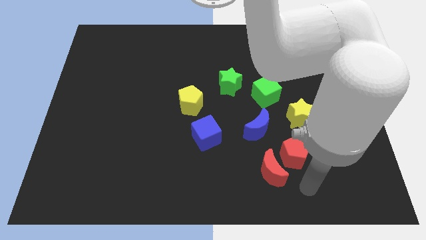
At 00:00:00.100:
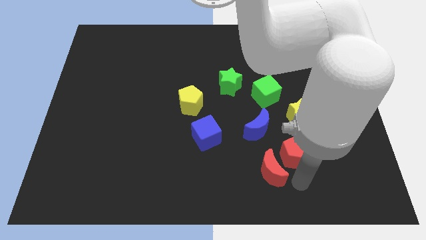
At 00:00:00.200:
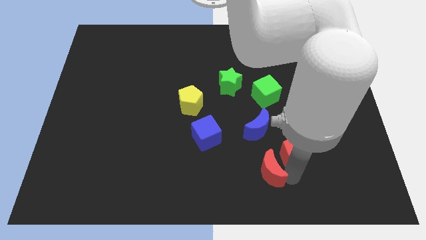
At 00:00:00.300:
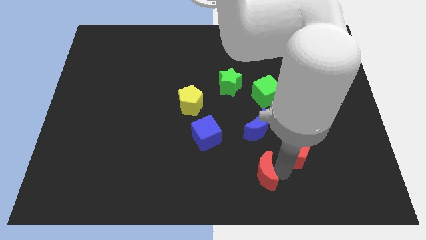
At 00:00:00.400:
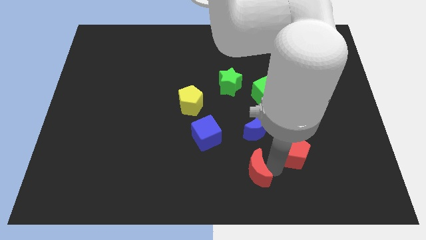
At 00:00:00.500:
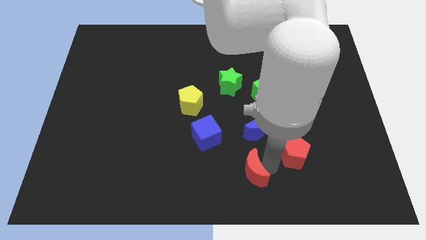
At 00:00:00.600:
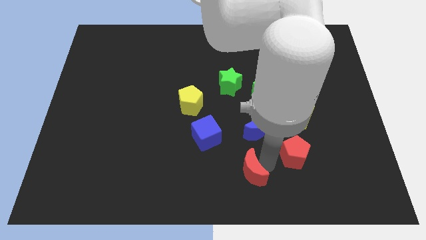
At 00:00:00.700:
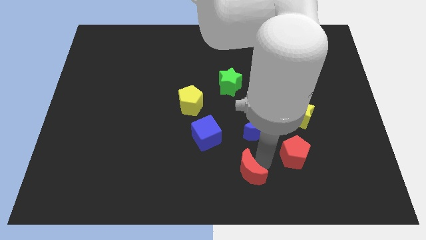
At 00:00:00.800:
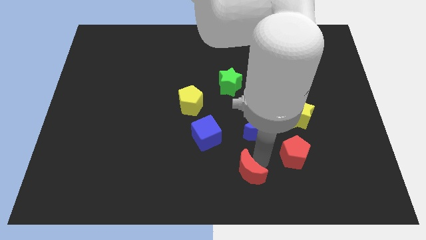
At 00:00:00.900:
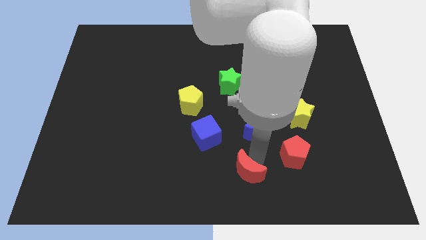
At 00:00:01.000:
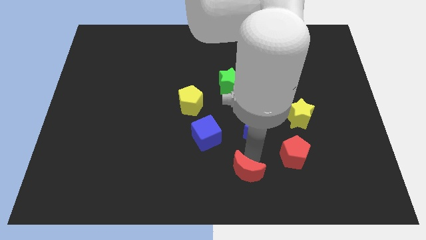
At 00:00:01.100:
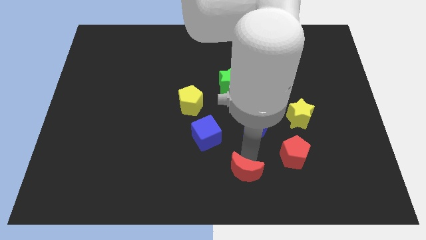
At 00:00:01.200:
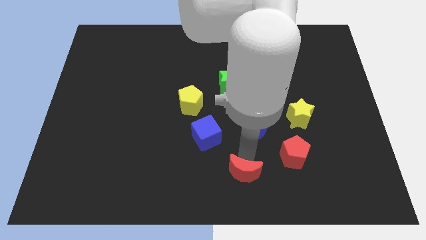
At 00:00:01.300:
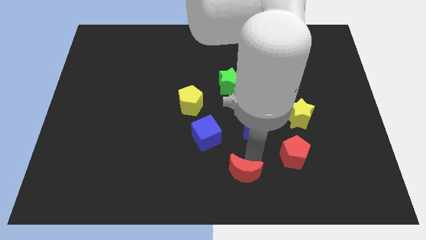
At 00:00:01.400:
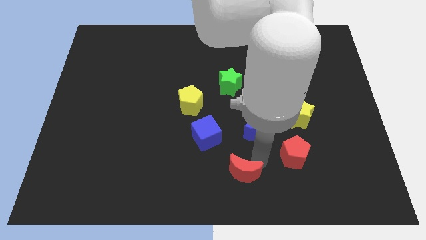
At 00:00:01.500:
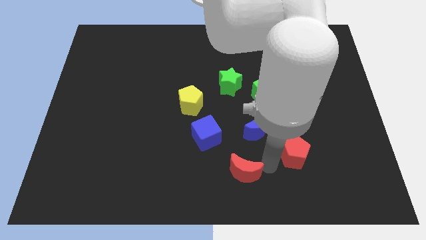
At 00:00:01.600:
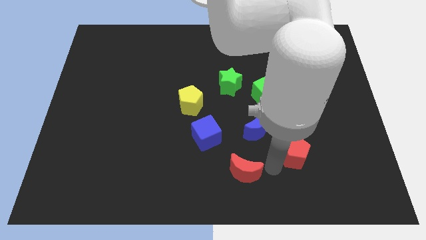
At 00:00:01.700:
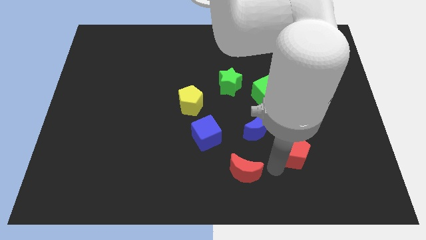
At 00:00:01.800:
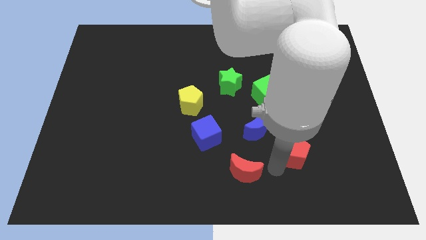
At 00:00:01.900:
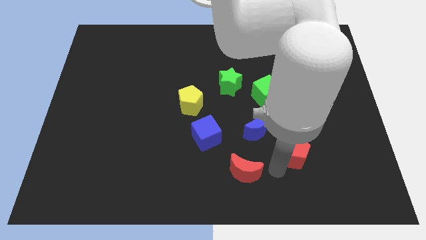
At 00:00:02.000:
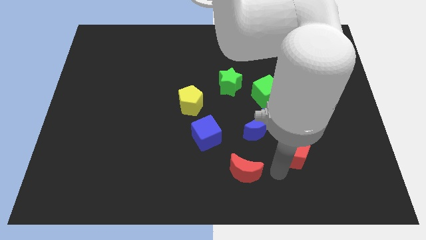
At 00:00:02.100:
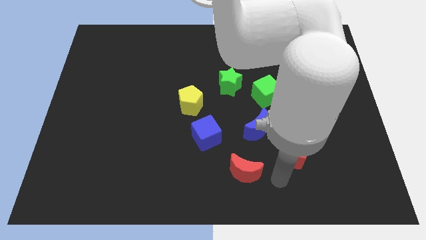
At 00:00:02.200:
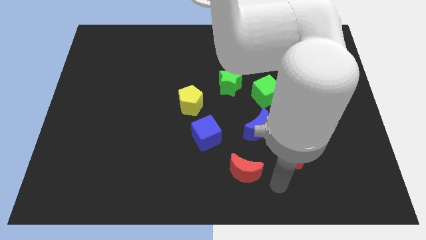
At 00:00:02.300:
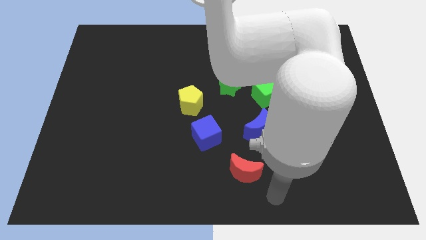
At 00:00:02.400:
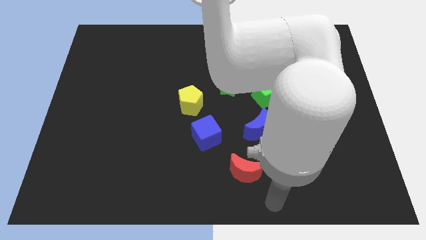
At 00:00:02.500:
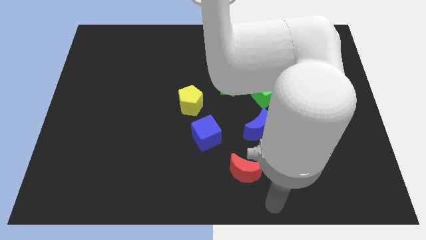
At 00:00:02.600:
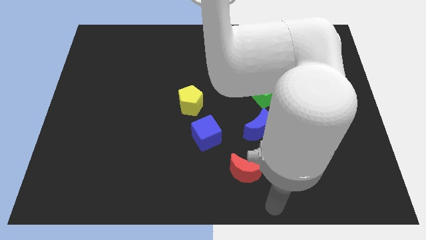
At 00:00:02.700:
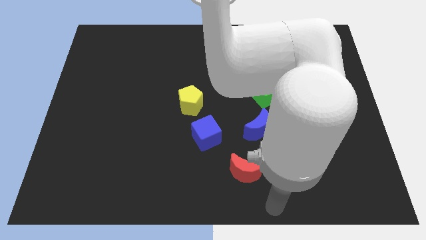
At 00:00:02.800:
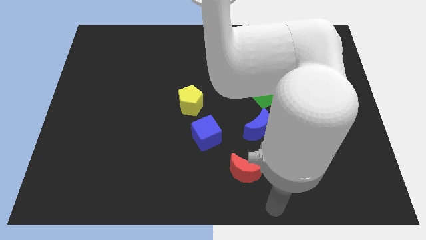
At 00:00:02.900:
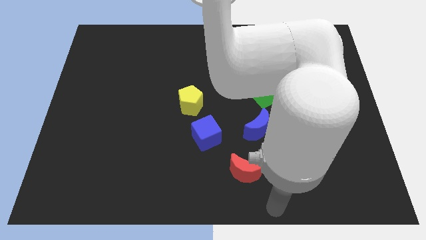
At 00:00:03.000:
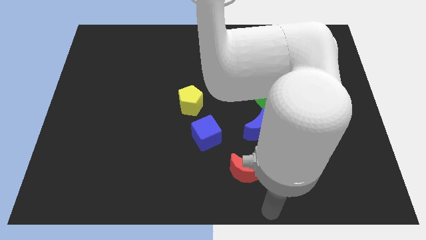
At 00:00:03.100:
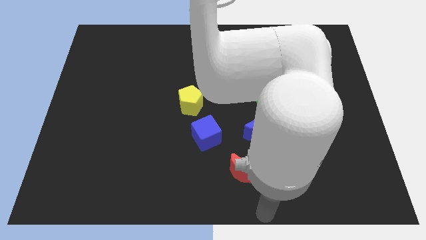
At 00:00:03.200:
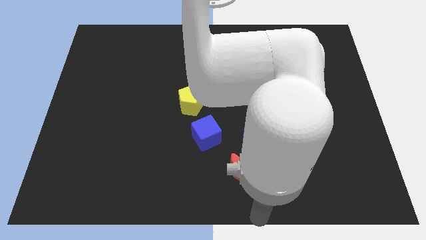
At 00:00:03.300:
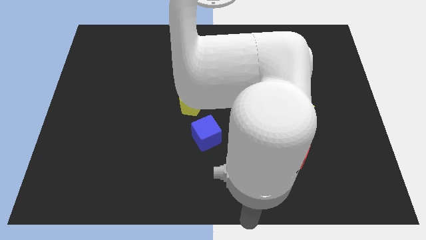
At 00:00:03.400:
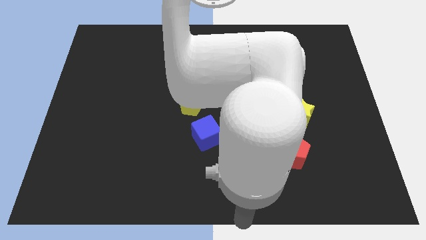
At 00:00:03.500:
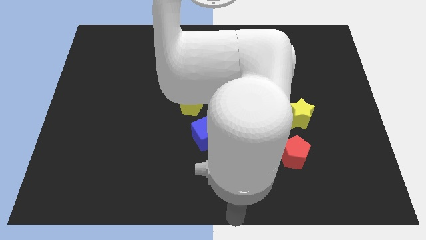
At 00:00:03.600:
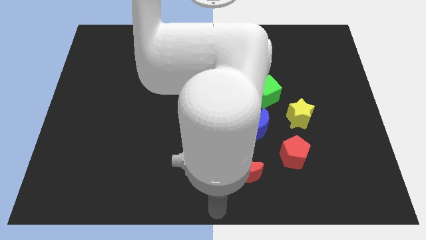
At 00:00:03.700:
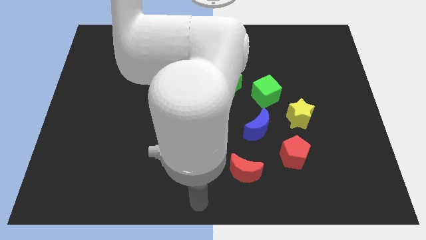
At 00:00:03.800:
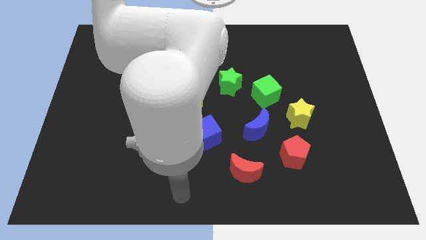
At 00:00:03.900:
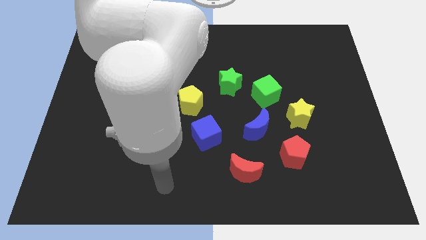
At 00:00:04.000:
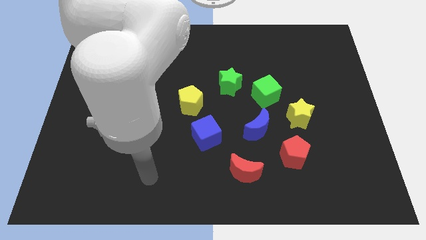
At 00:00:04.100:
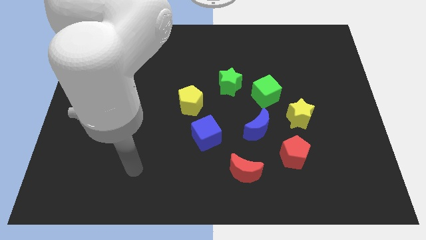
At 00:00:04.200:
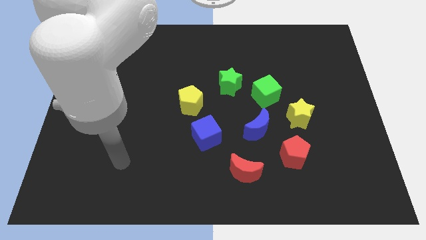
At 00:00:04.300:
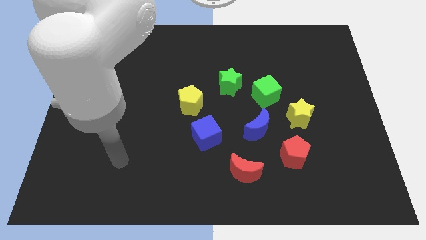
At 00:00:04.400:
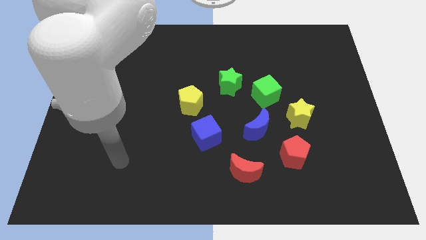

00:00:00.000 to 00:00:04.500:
push the red moon away from the red pentagon

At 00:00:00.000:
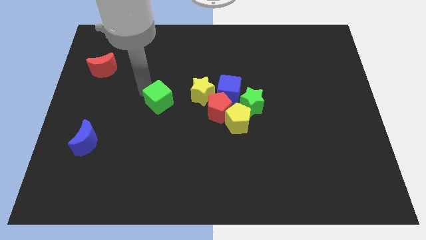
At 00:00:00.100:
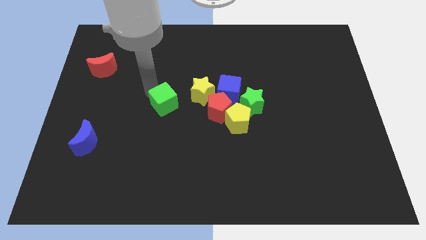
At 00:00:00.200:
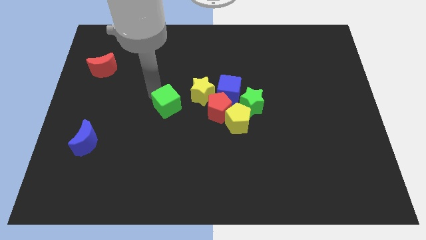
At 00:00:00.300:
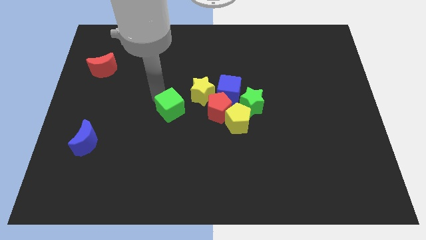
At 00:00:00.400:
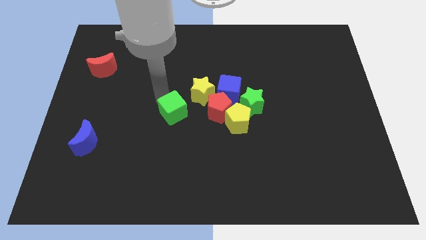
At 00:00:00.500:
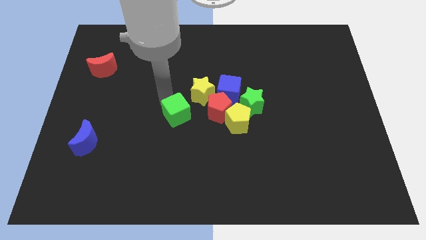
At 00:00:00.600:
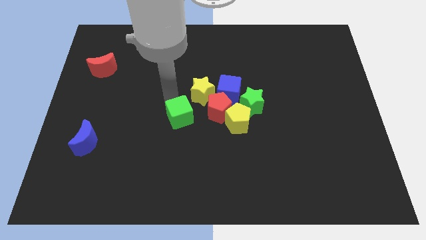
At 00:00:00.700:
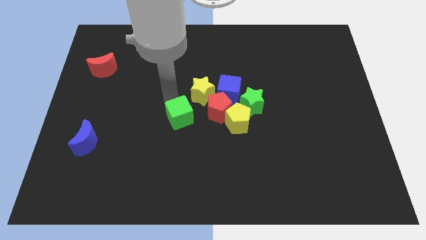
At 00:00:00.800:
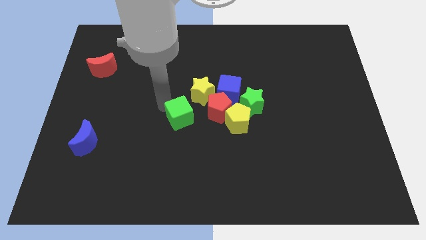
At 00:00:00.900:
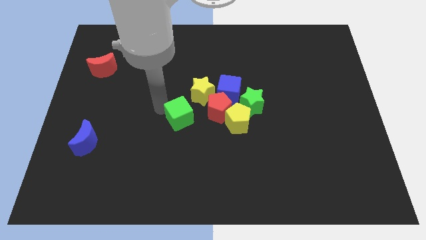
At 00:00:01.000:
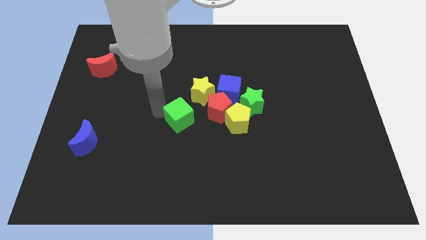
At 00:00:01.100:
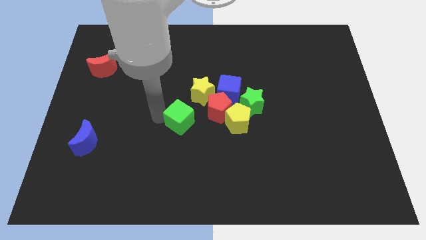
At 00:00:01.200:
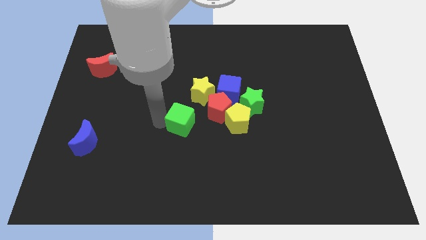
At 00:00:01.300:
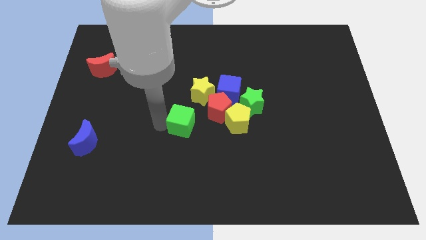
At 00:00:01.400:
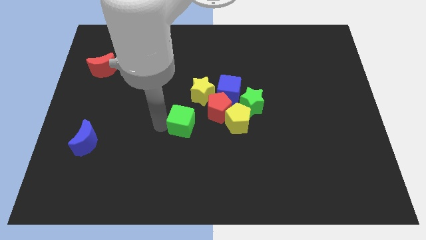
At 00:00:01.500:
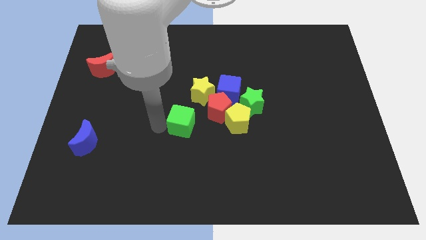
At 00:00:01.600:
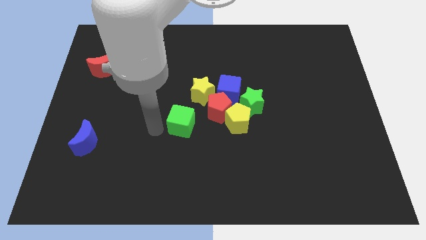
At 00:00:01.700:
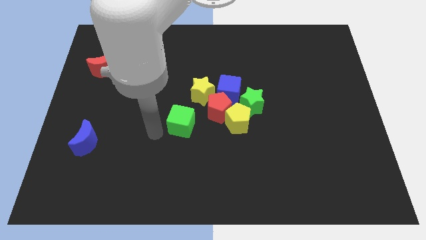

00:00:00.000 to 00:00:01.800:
move the green cube bottom left to the red pentagon

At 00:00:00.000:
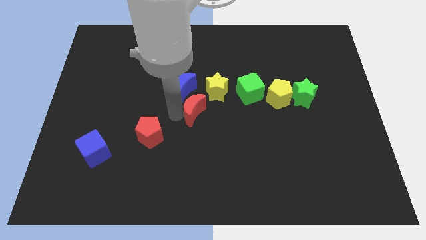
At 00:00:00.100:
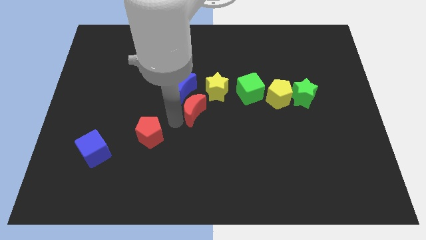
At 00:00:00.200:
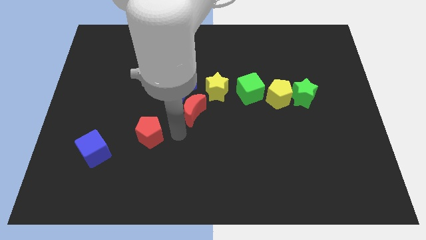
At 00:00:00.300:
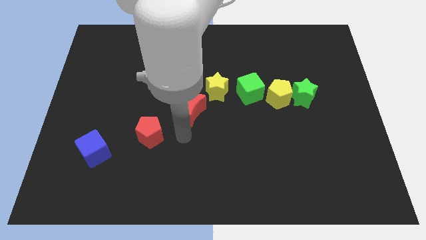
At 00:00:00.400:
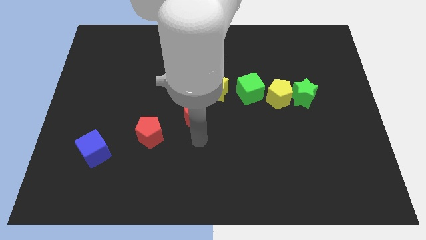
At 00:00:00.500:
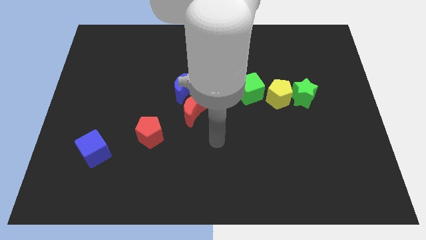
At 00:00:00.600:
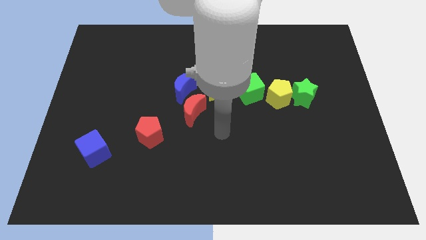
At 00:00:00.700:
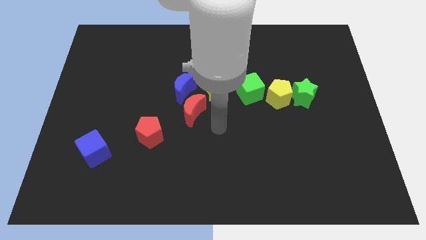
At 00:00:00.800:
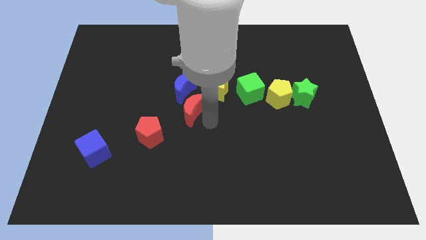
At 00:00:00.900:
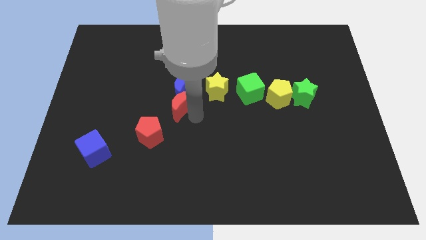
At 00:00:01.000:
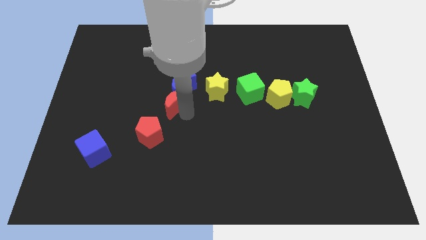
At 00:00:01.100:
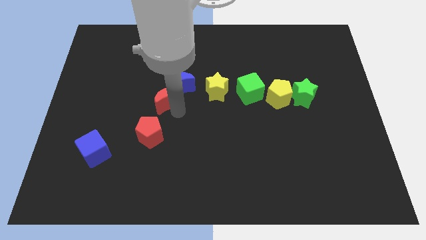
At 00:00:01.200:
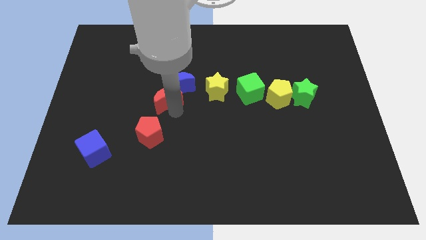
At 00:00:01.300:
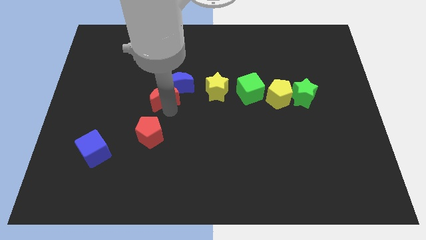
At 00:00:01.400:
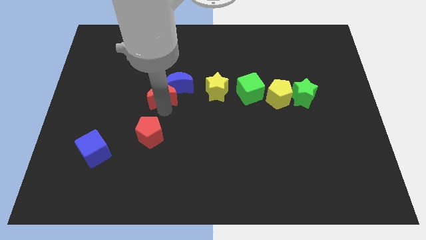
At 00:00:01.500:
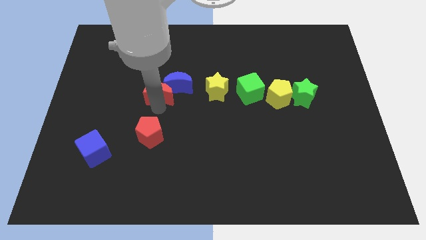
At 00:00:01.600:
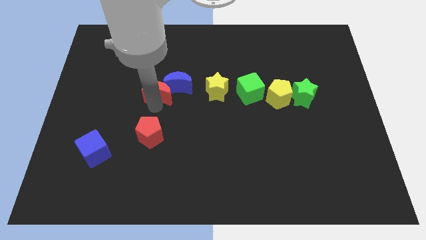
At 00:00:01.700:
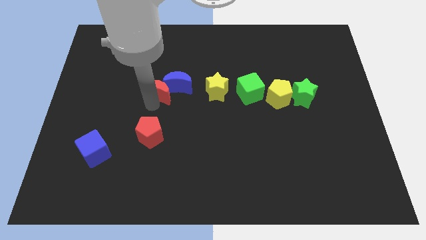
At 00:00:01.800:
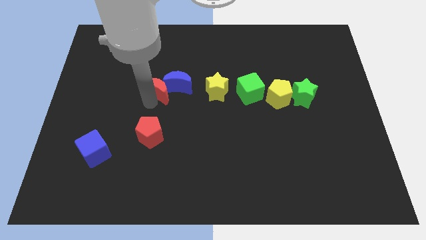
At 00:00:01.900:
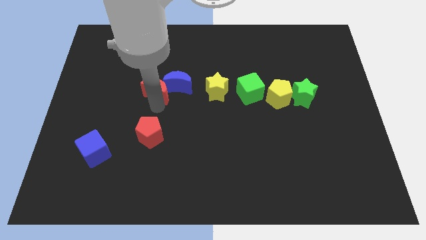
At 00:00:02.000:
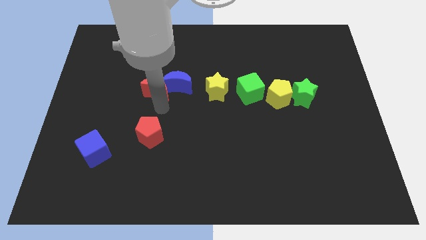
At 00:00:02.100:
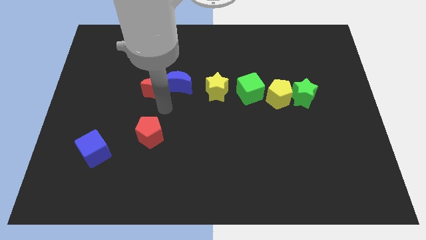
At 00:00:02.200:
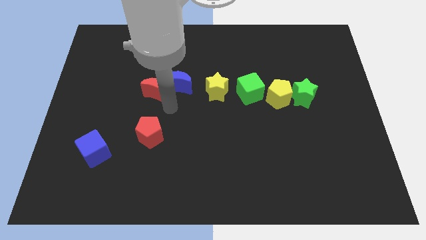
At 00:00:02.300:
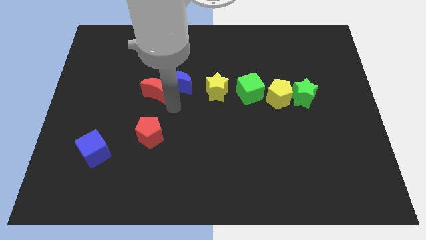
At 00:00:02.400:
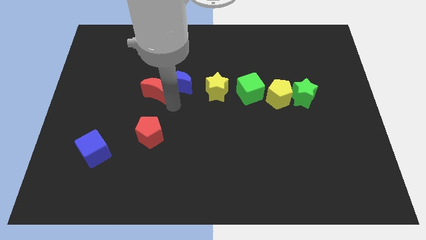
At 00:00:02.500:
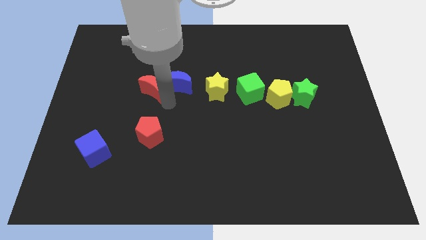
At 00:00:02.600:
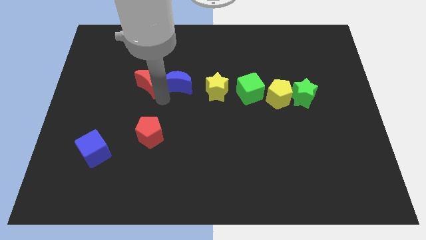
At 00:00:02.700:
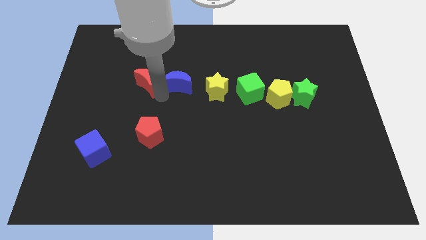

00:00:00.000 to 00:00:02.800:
push the red crescent to the left of blue crescent
